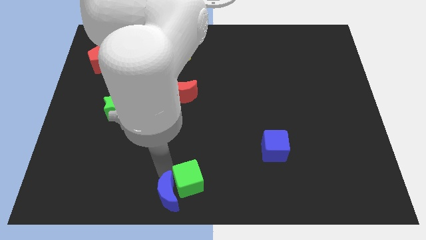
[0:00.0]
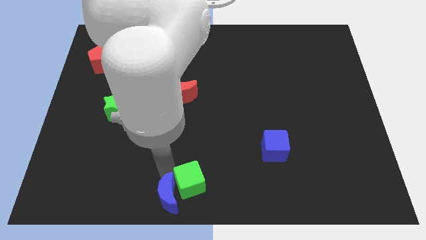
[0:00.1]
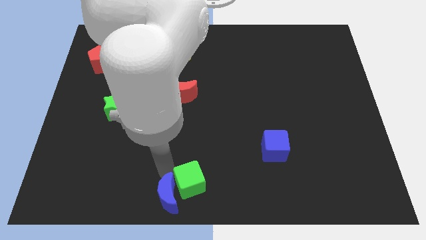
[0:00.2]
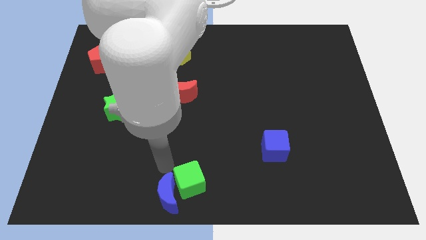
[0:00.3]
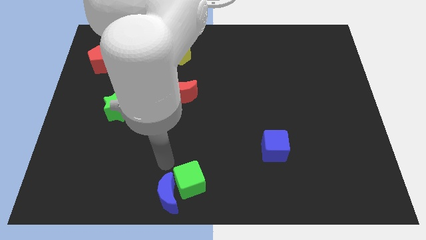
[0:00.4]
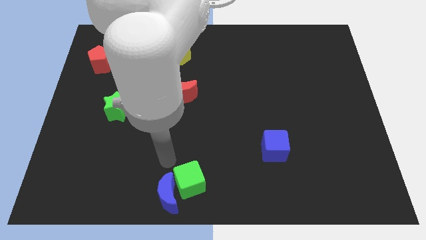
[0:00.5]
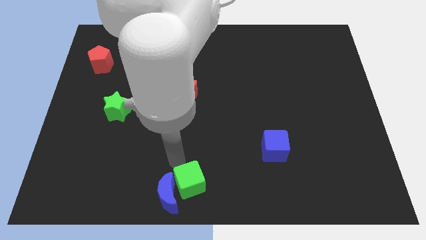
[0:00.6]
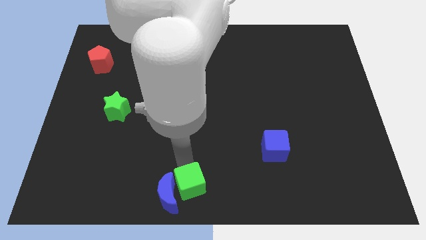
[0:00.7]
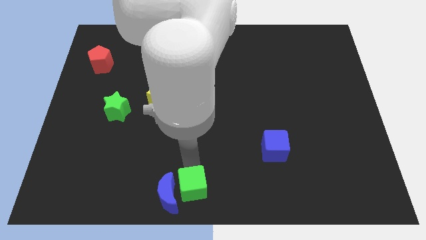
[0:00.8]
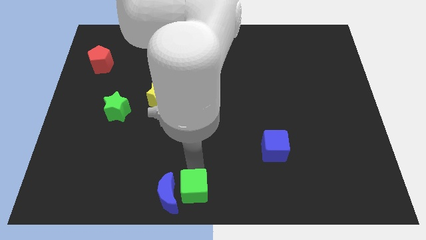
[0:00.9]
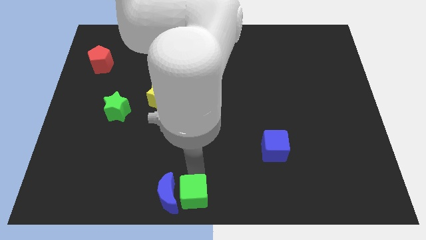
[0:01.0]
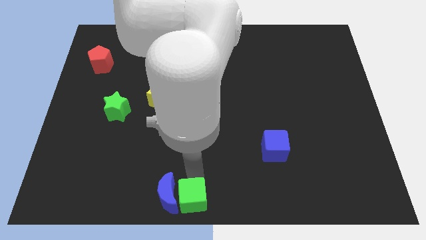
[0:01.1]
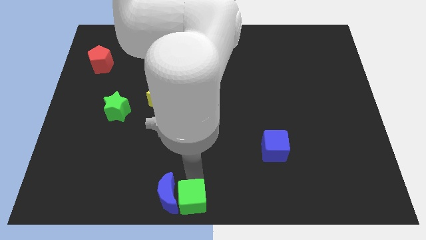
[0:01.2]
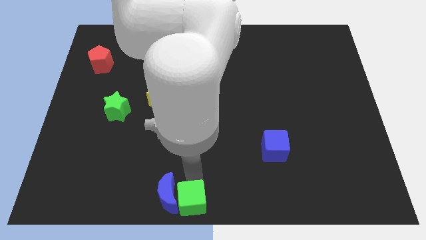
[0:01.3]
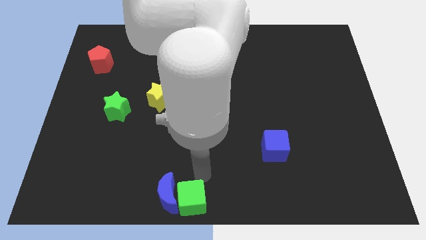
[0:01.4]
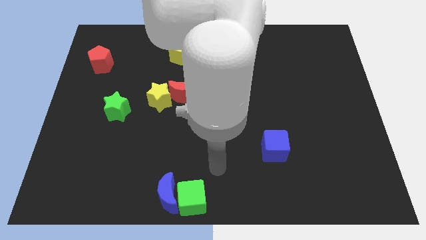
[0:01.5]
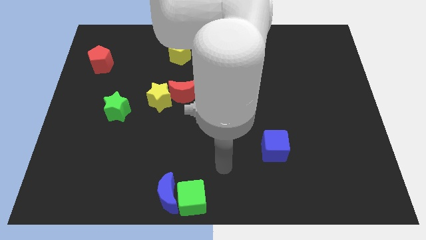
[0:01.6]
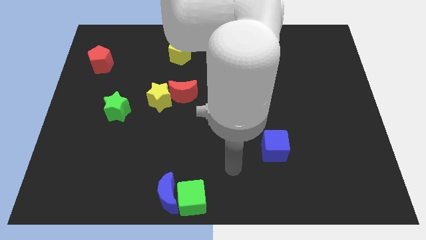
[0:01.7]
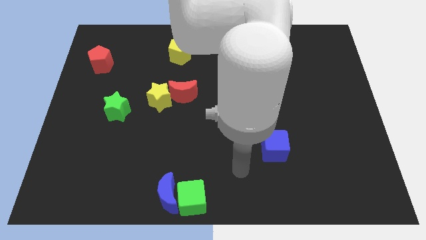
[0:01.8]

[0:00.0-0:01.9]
adjust both the green cube and blue crescent at the bottom center of the board

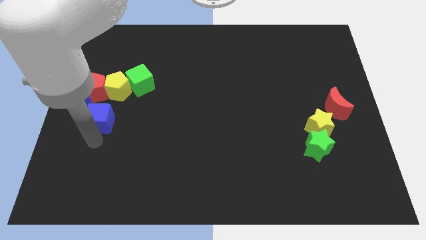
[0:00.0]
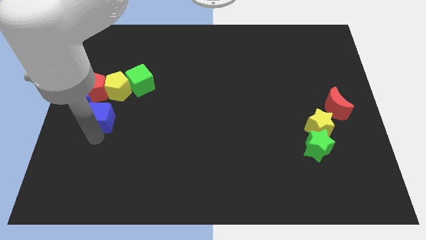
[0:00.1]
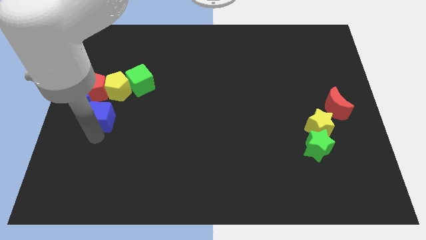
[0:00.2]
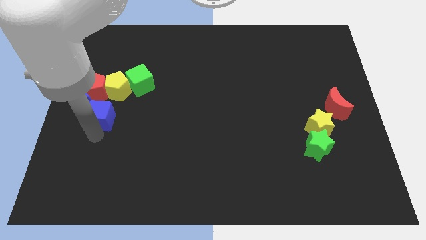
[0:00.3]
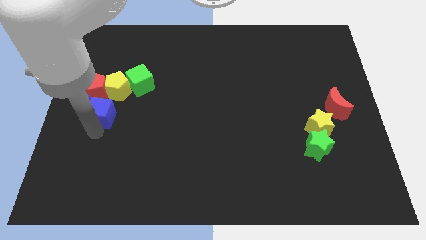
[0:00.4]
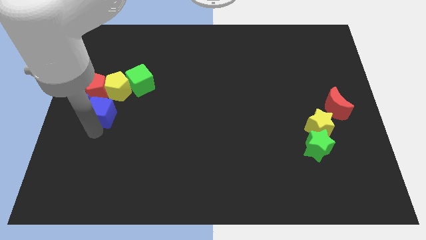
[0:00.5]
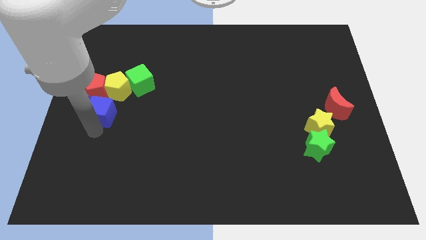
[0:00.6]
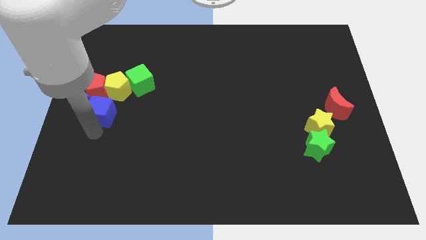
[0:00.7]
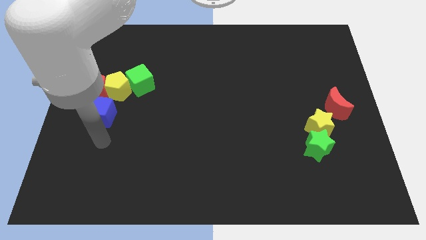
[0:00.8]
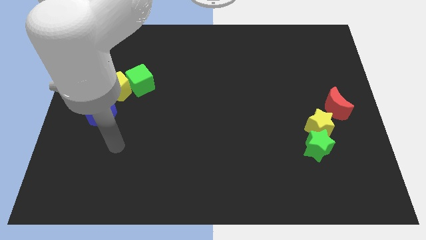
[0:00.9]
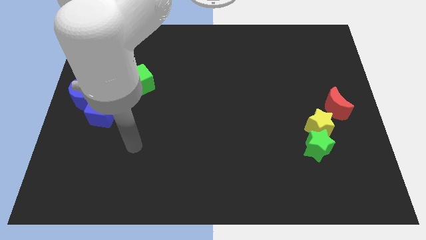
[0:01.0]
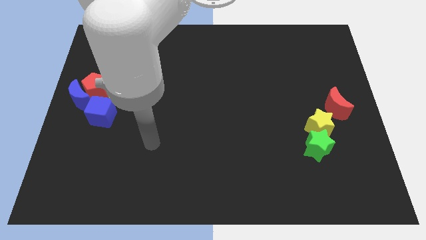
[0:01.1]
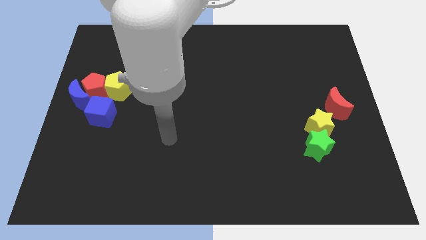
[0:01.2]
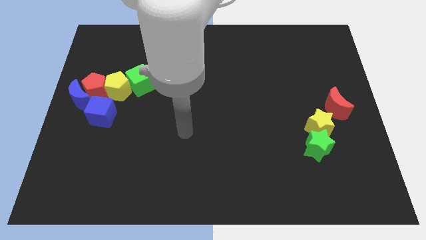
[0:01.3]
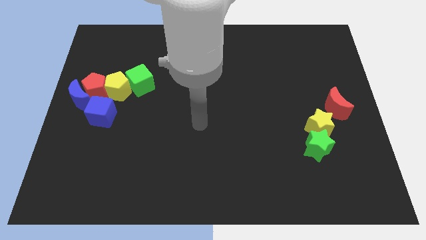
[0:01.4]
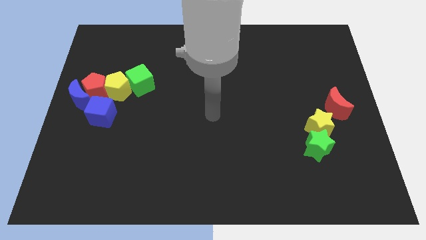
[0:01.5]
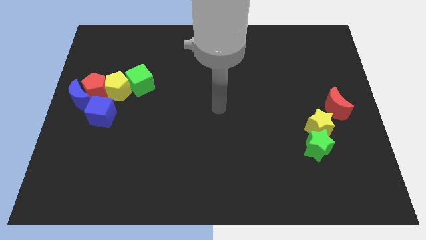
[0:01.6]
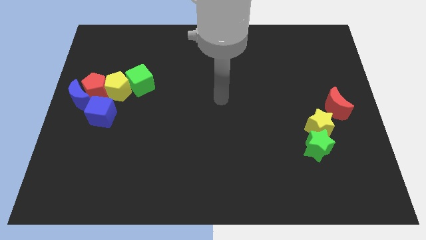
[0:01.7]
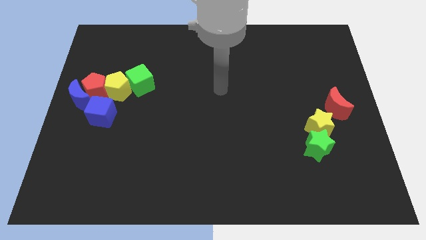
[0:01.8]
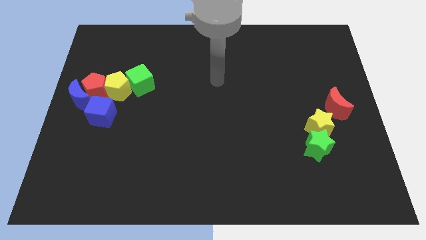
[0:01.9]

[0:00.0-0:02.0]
move your arm away from the blue cube

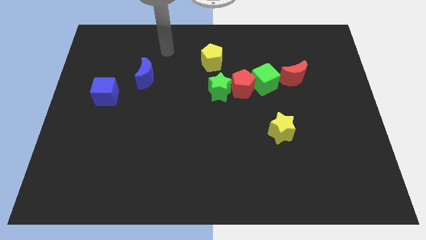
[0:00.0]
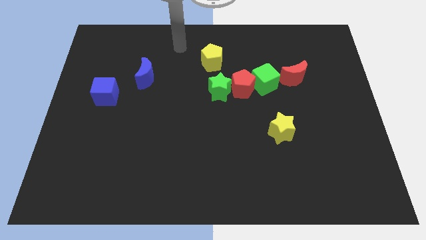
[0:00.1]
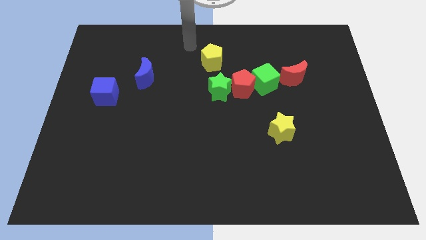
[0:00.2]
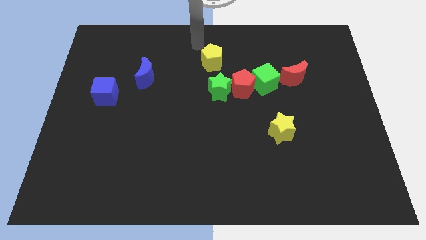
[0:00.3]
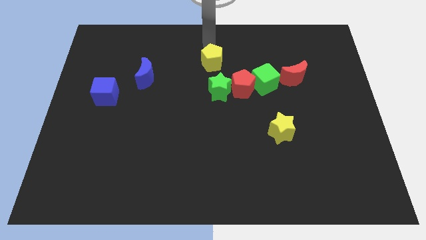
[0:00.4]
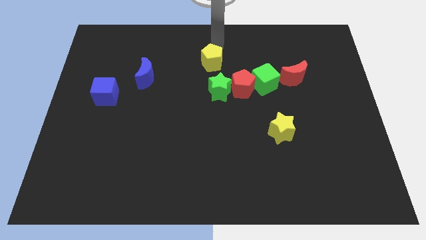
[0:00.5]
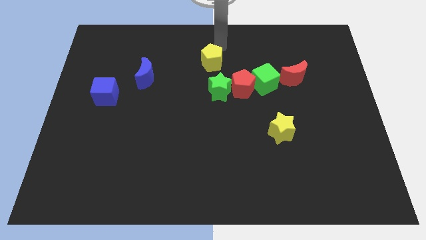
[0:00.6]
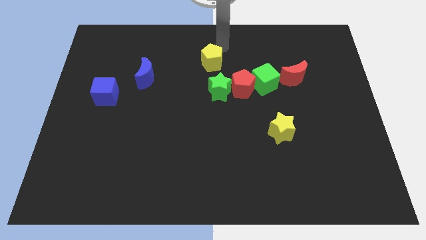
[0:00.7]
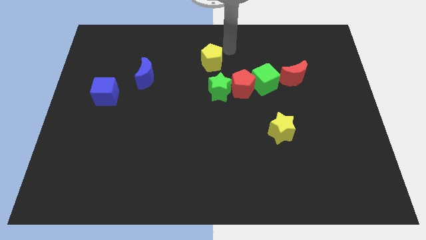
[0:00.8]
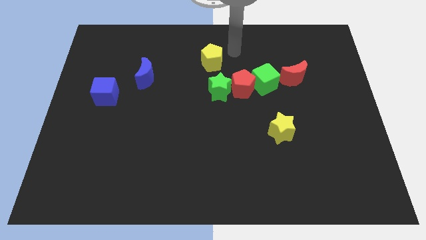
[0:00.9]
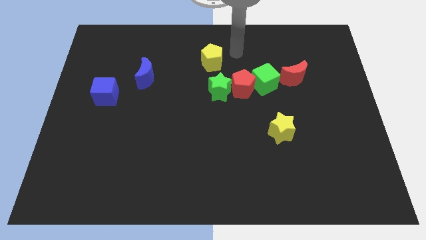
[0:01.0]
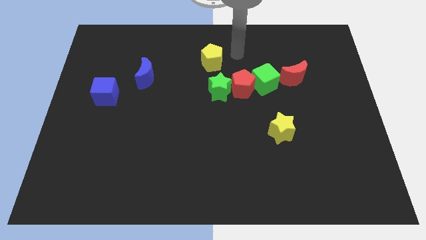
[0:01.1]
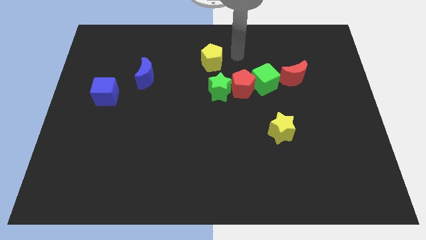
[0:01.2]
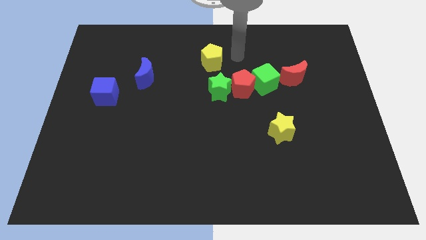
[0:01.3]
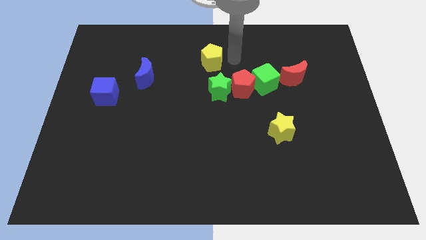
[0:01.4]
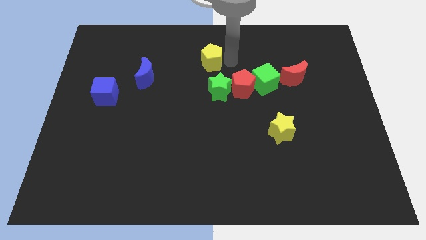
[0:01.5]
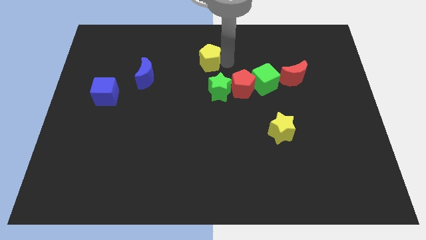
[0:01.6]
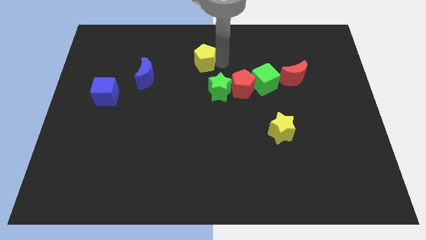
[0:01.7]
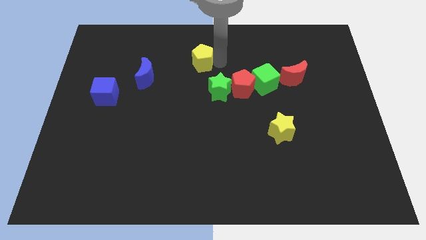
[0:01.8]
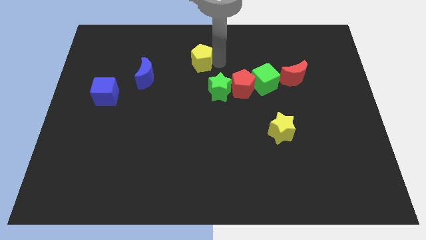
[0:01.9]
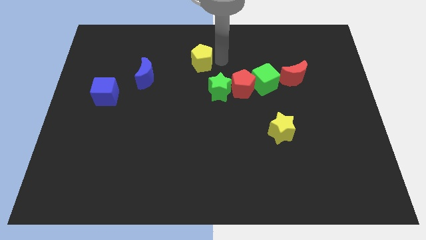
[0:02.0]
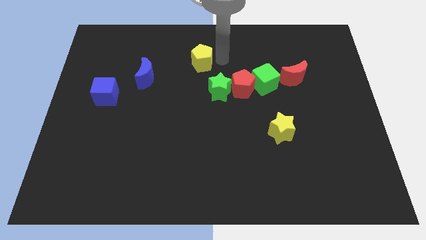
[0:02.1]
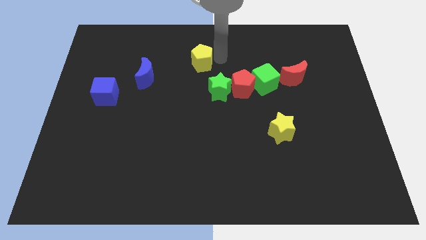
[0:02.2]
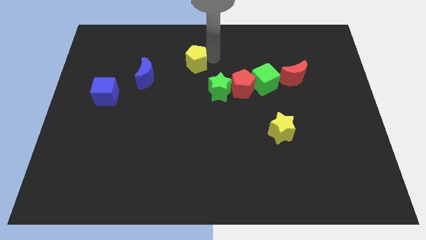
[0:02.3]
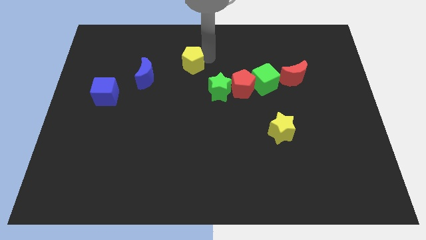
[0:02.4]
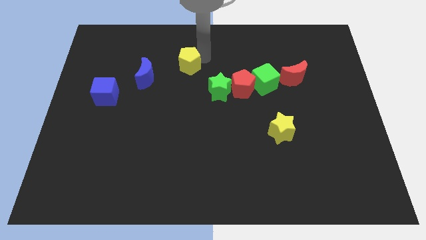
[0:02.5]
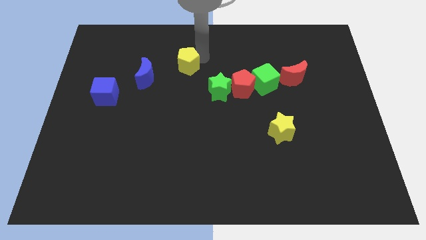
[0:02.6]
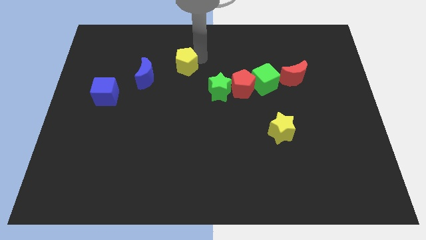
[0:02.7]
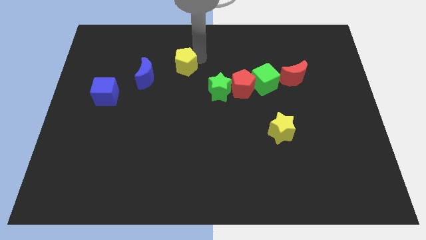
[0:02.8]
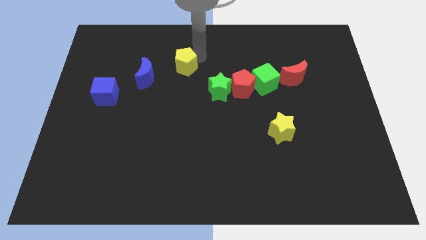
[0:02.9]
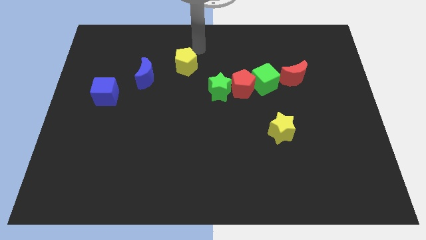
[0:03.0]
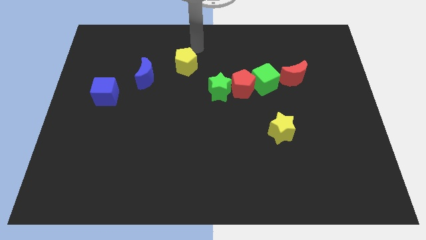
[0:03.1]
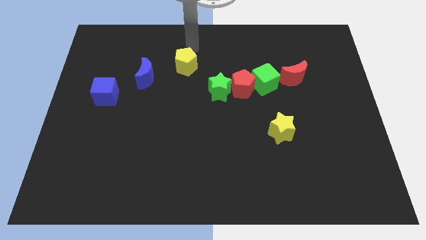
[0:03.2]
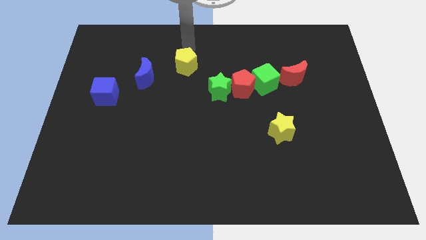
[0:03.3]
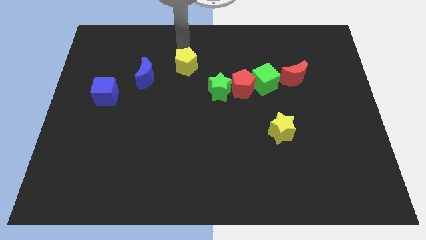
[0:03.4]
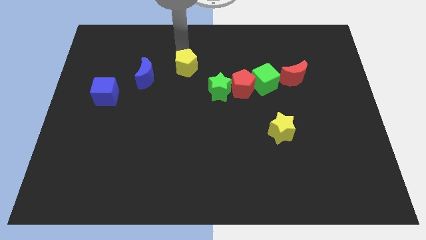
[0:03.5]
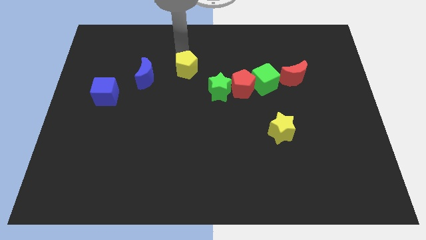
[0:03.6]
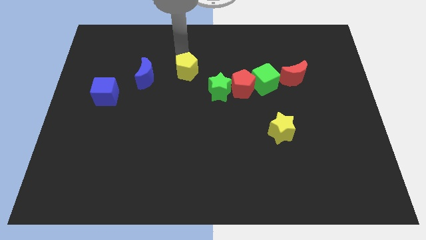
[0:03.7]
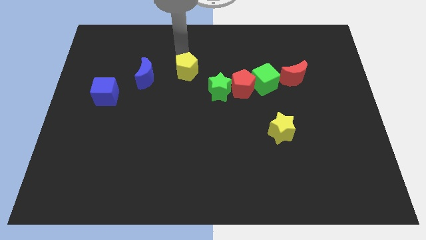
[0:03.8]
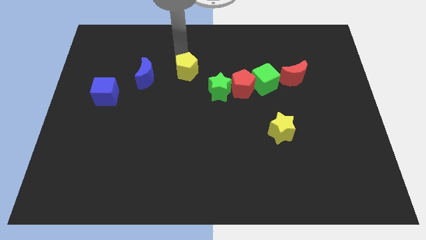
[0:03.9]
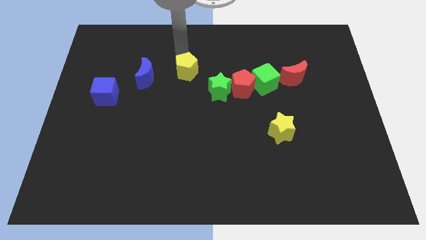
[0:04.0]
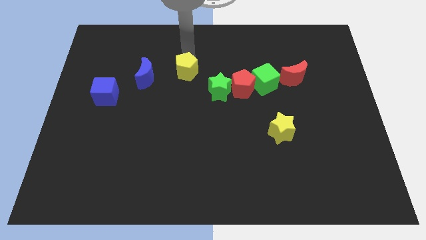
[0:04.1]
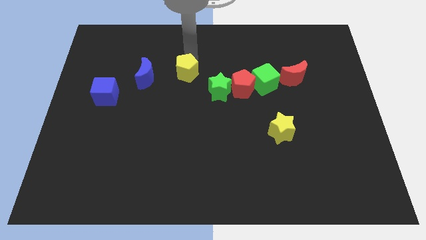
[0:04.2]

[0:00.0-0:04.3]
place the yellow pentagon towards the top left side of the green star

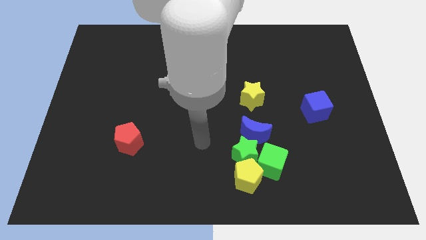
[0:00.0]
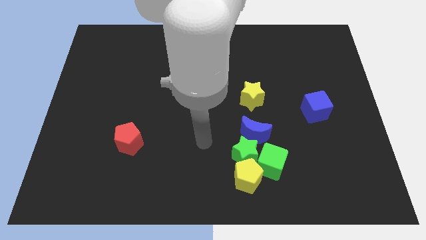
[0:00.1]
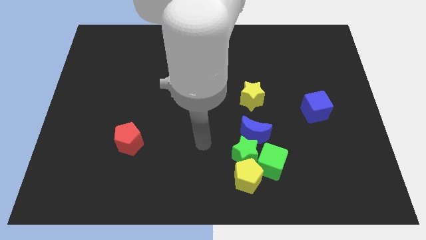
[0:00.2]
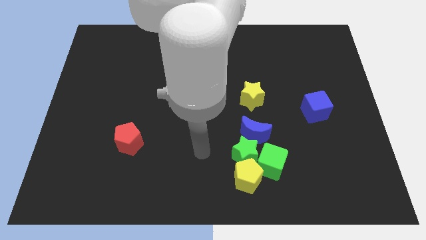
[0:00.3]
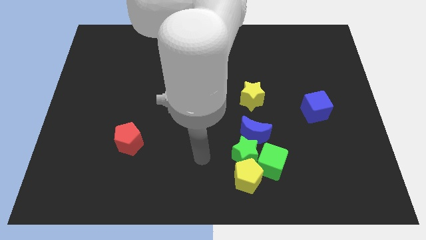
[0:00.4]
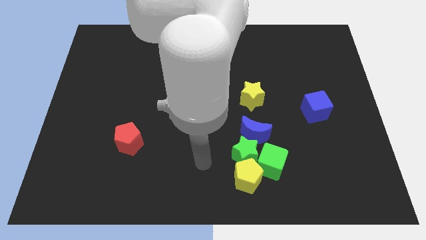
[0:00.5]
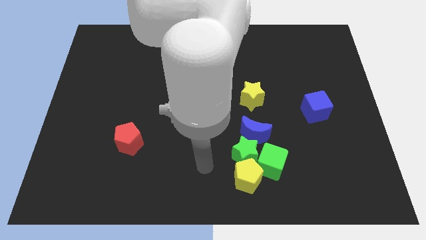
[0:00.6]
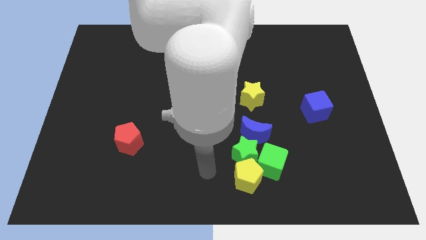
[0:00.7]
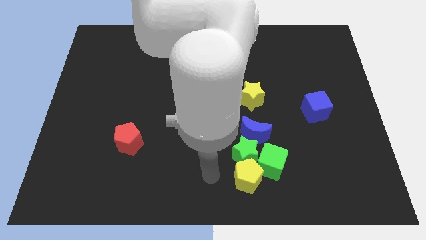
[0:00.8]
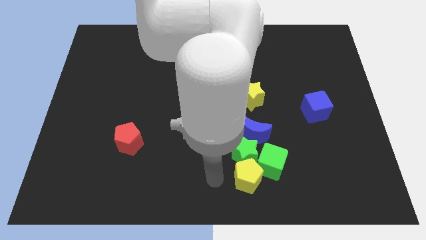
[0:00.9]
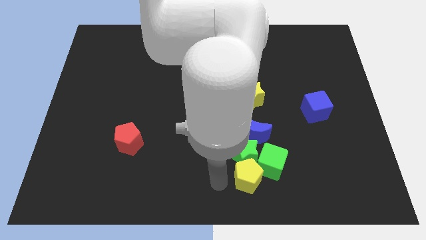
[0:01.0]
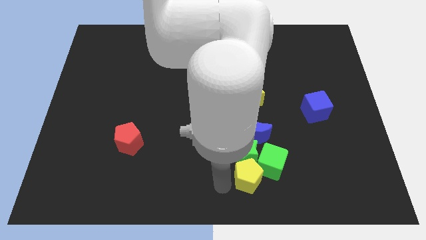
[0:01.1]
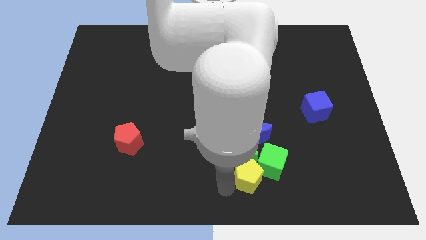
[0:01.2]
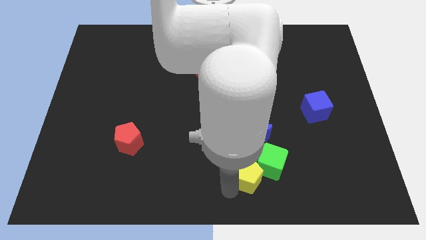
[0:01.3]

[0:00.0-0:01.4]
touch the bottom left of the yellow pentagon
